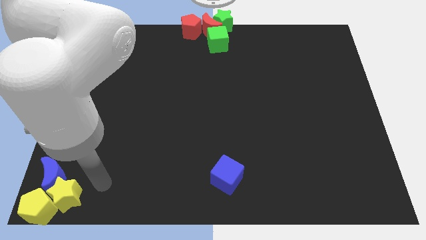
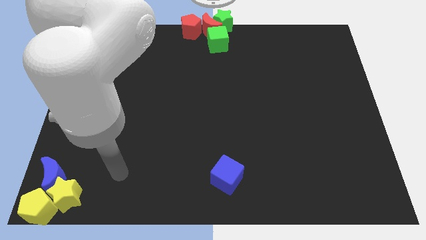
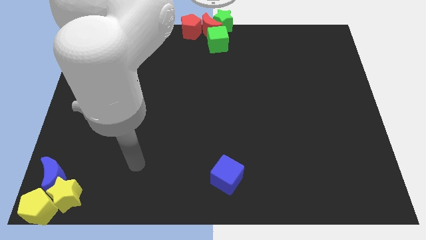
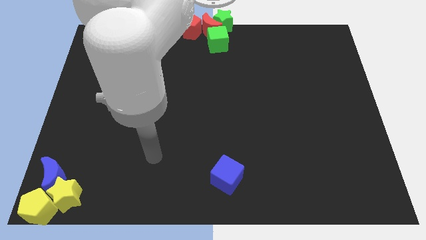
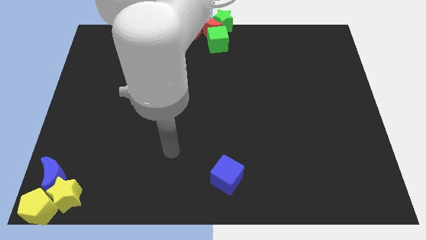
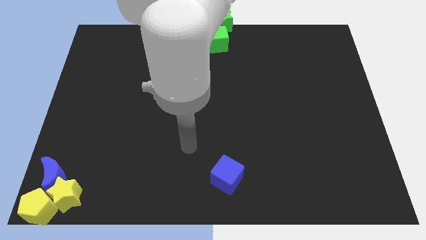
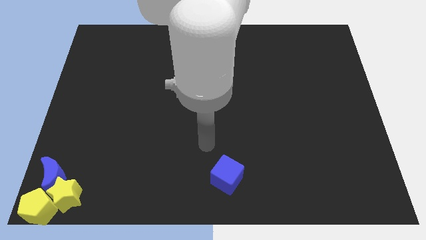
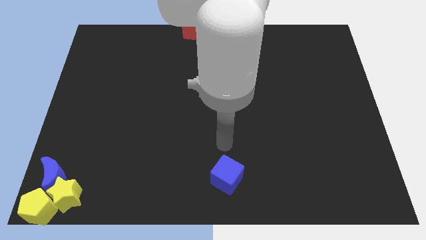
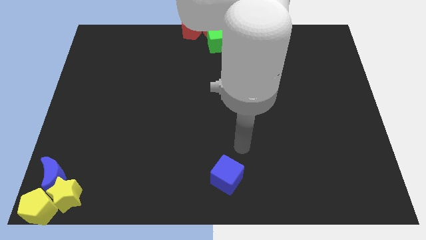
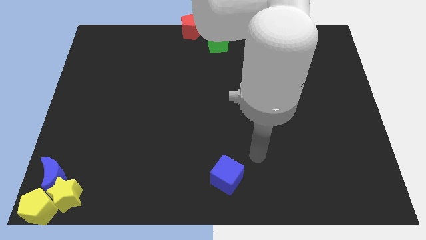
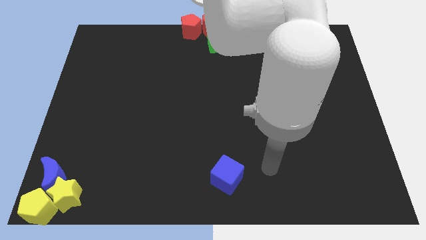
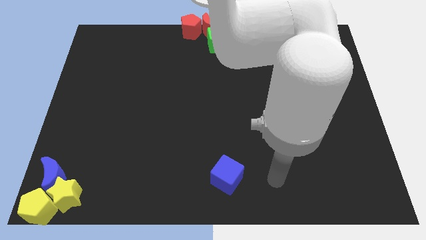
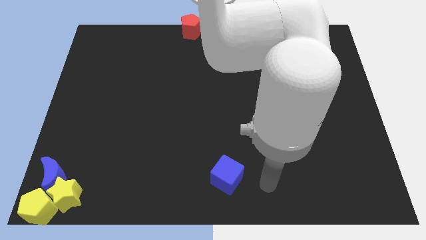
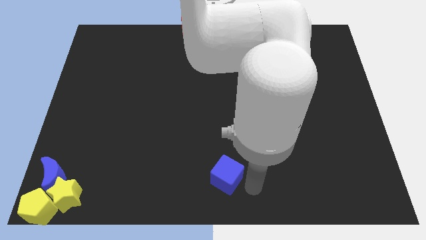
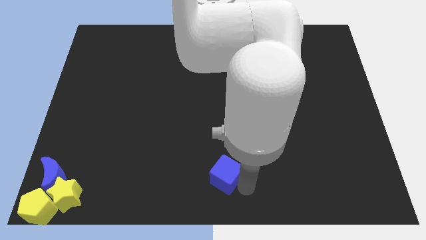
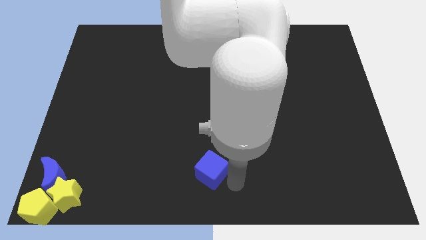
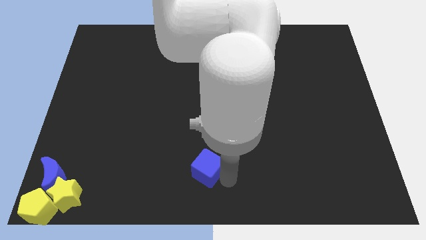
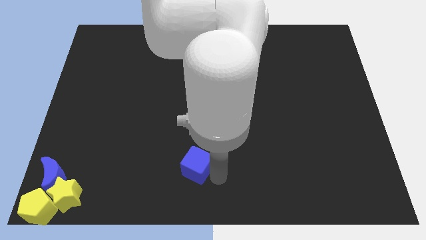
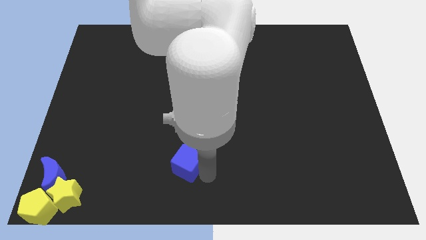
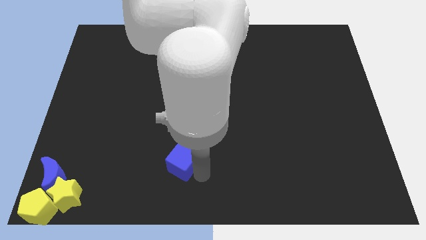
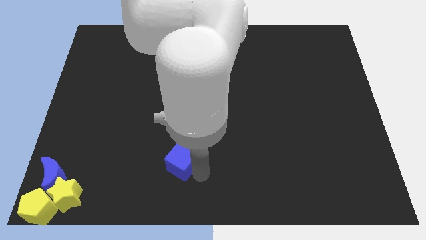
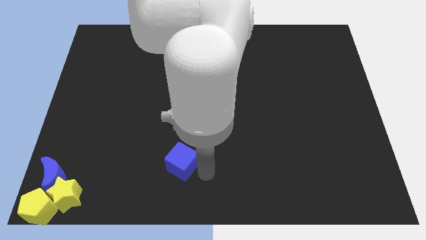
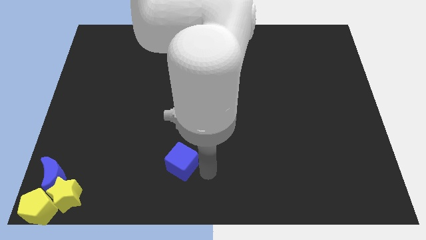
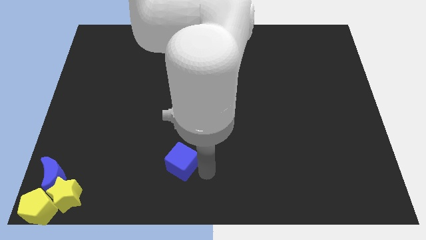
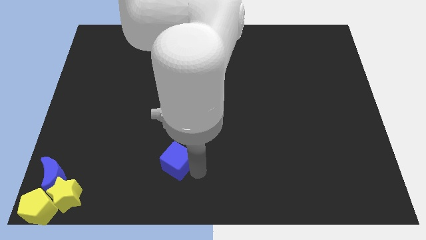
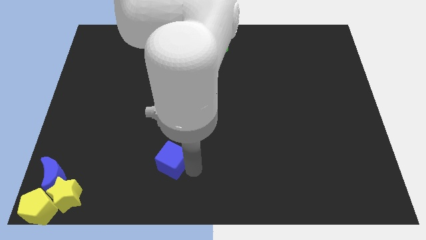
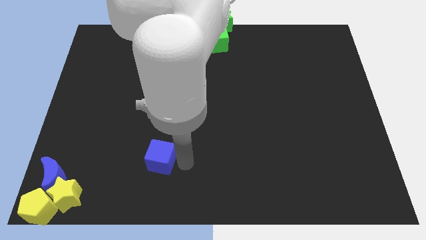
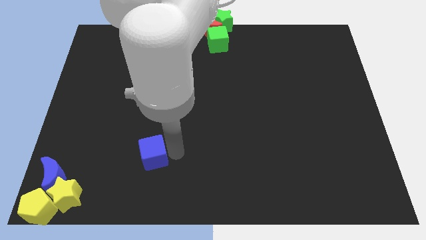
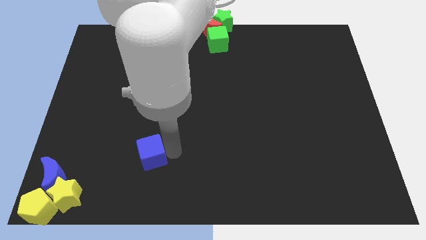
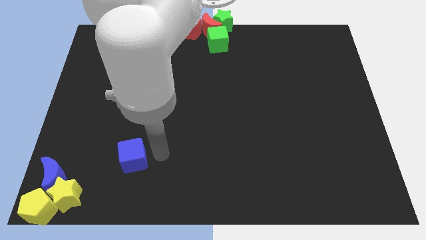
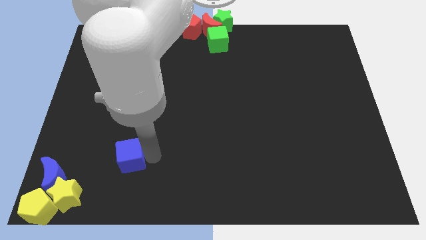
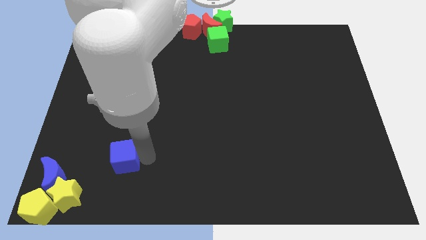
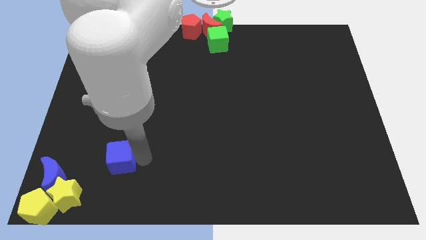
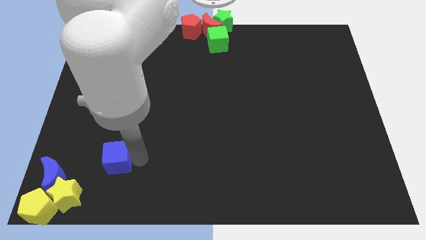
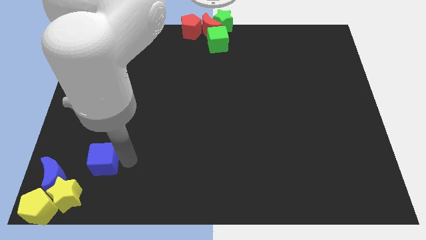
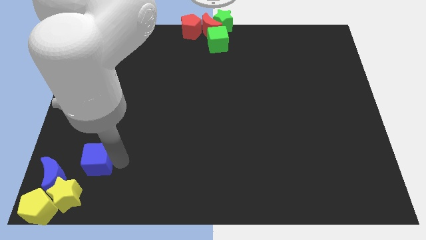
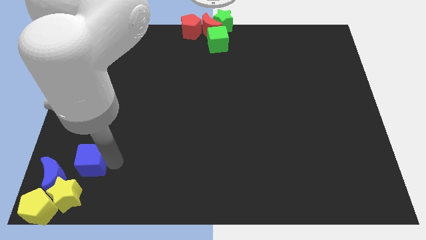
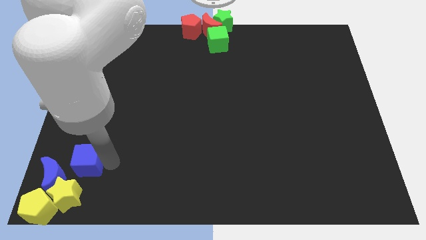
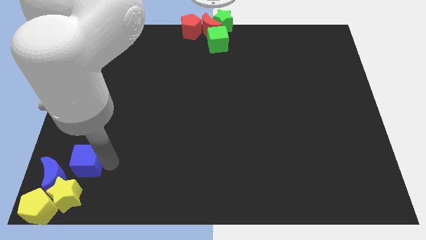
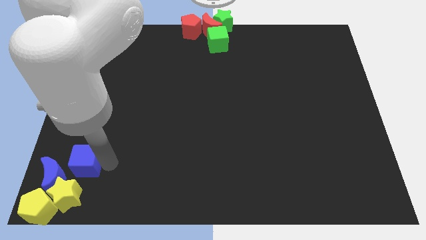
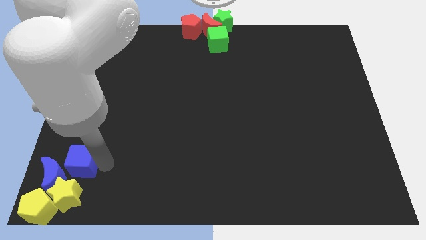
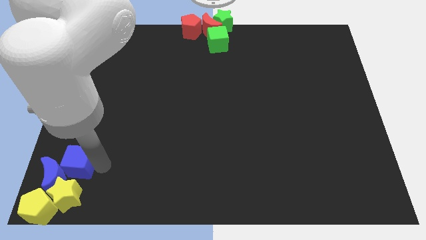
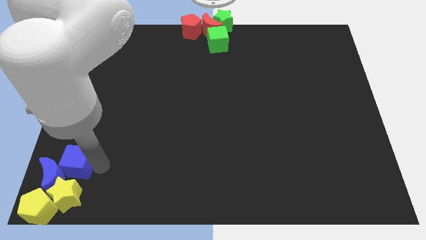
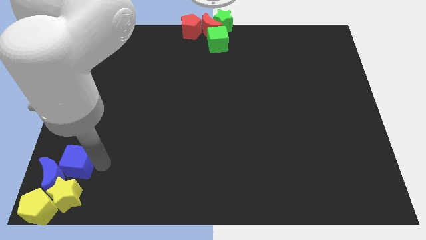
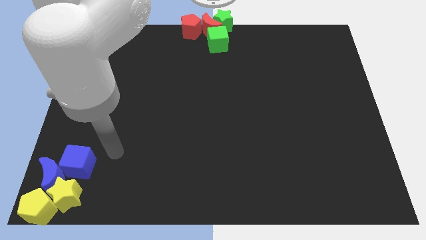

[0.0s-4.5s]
move the blue cube close right to the blue moon

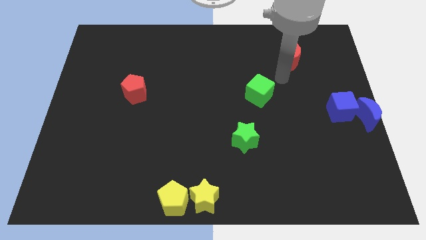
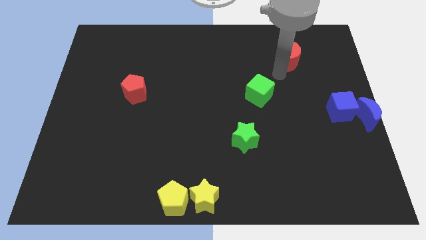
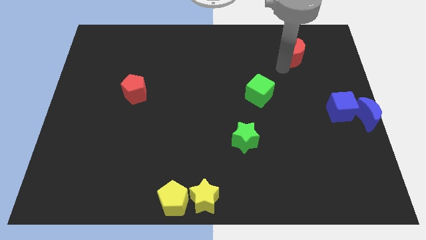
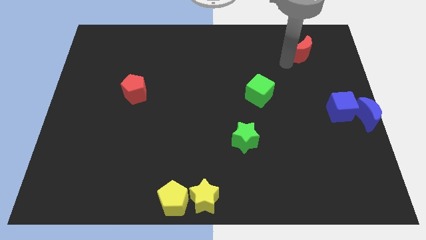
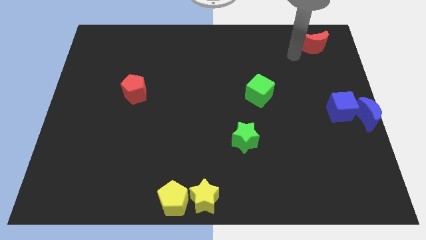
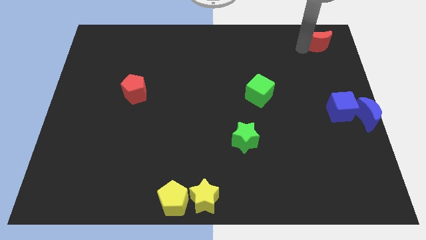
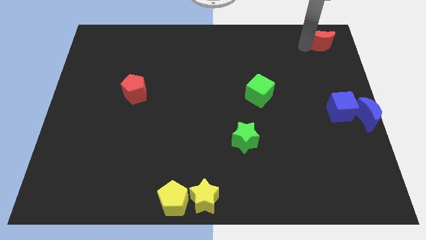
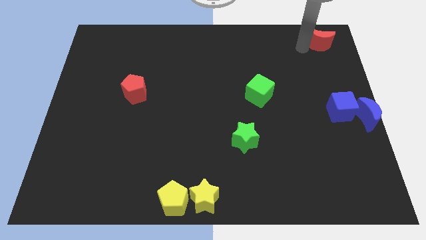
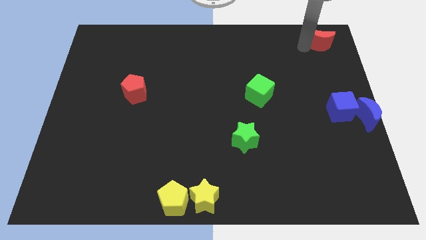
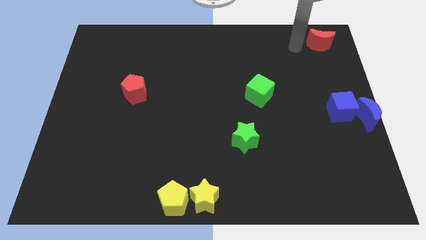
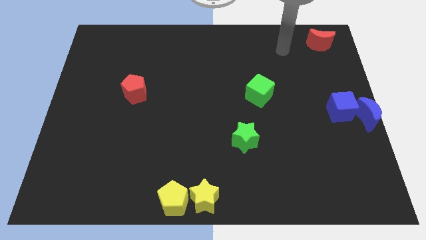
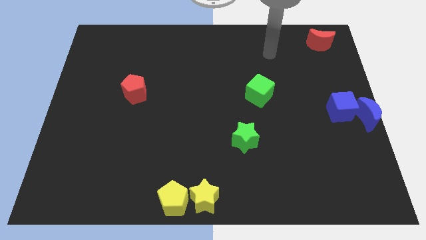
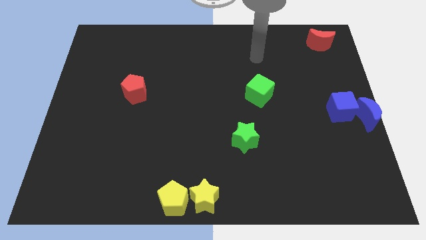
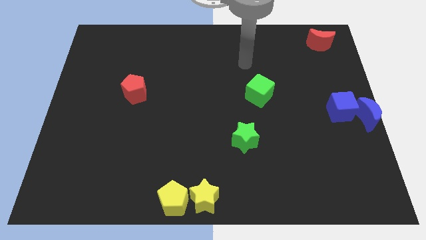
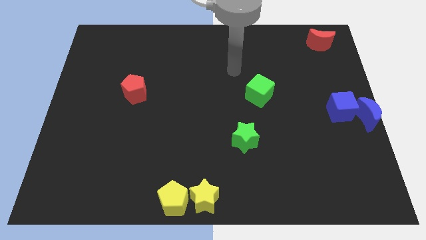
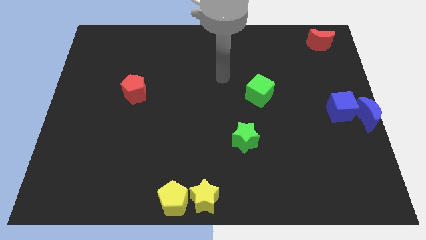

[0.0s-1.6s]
move the red moon to the top right

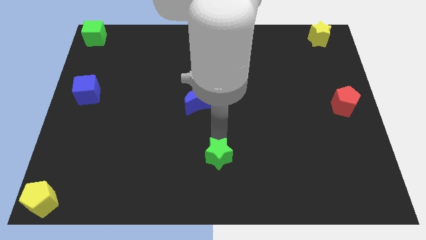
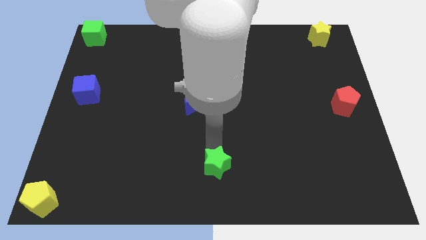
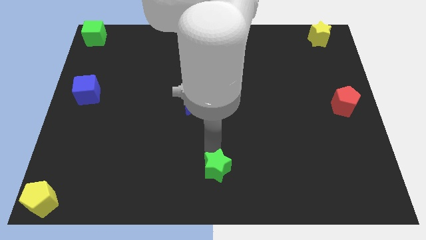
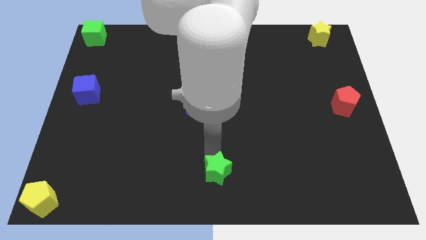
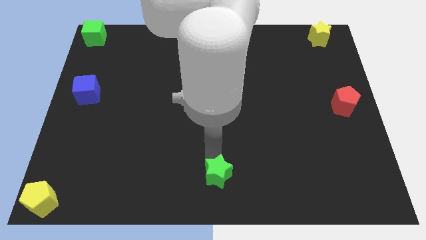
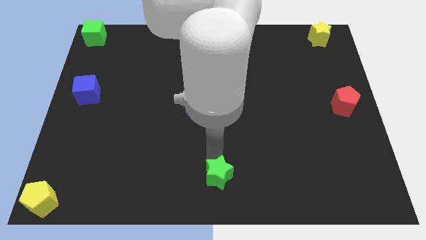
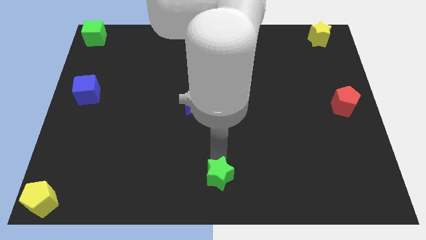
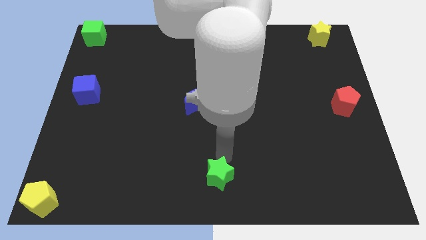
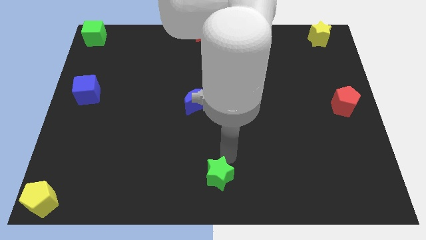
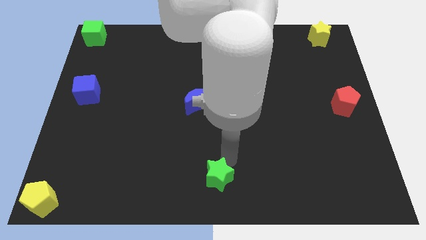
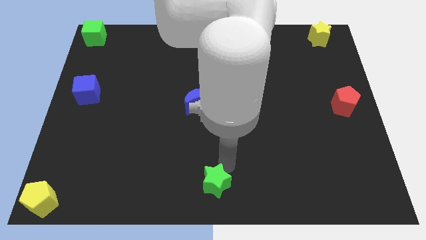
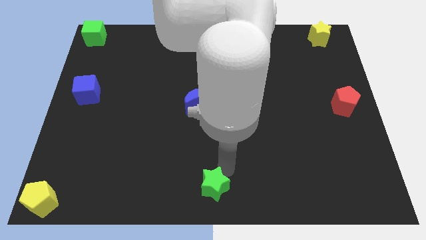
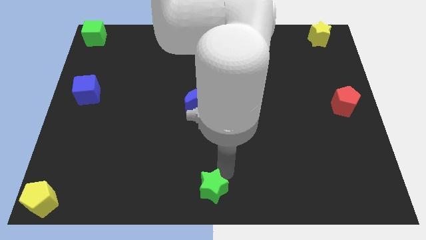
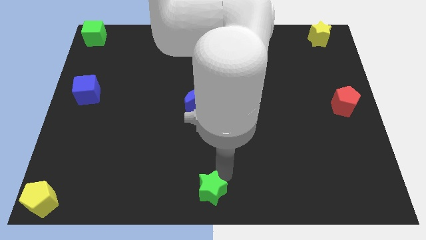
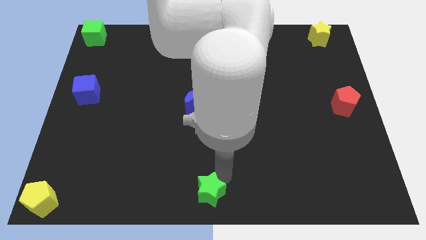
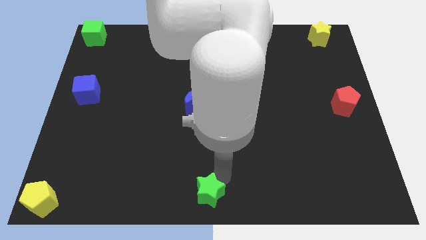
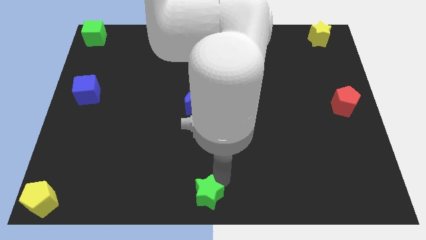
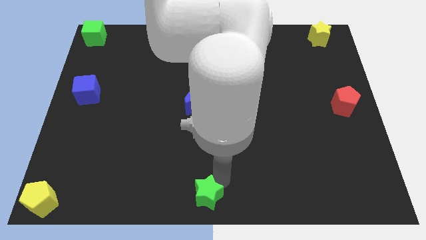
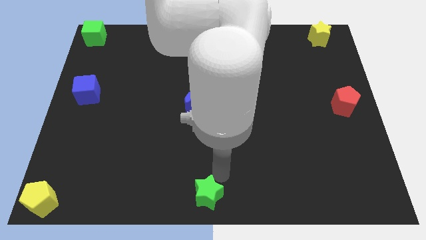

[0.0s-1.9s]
move the green star to the bottom center of the table

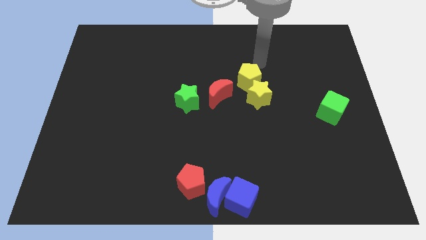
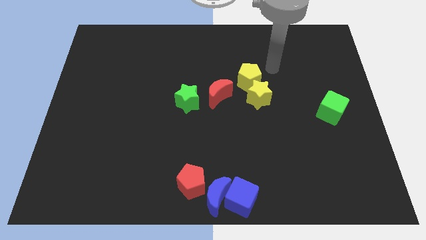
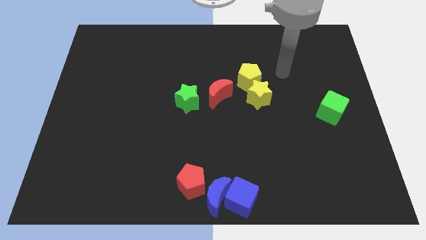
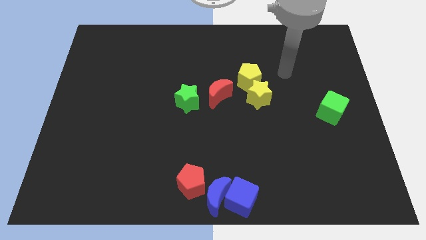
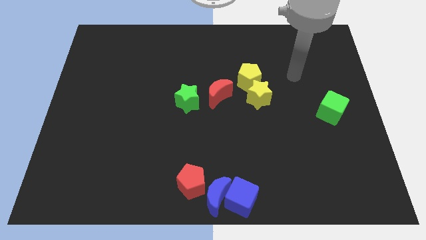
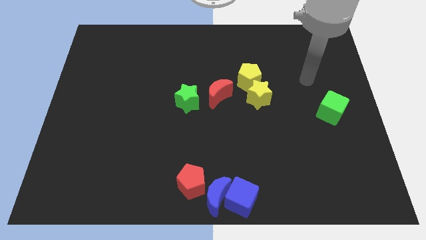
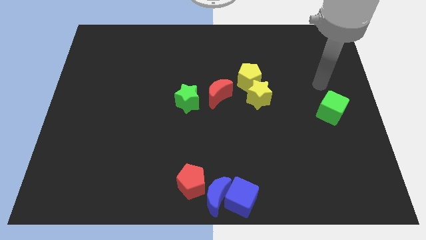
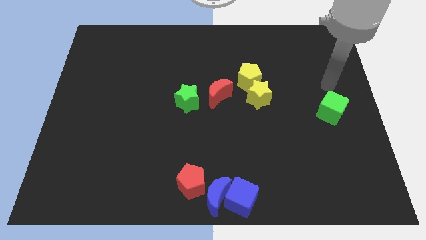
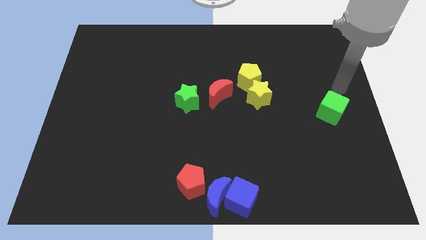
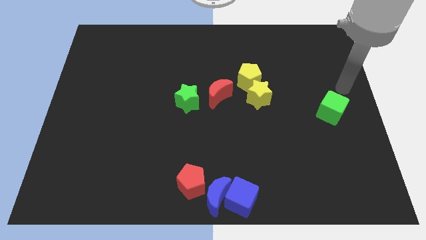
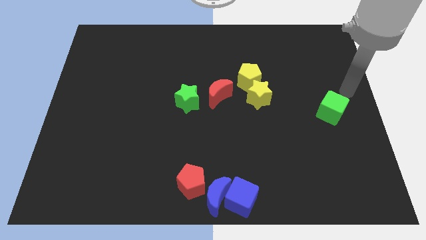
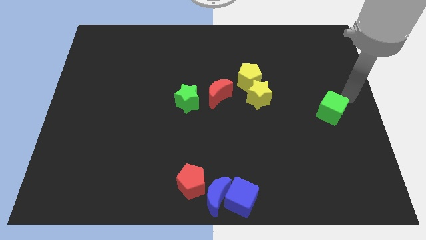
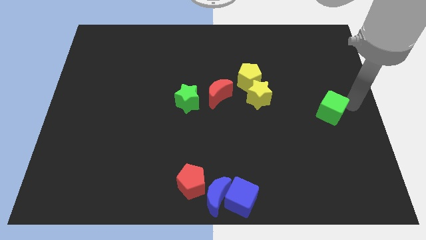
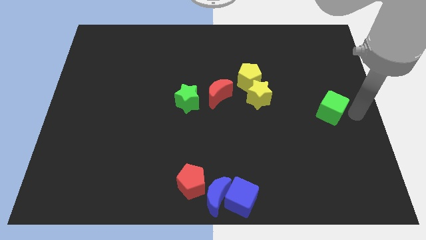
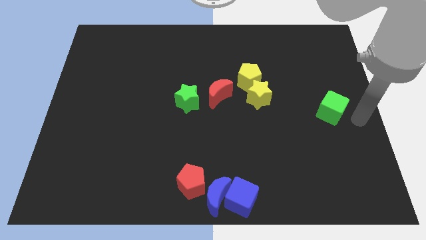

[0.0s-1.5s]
move your arm towards the green cube
